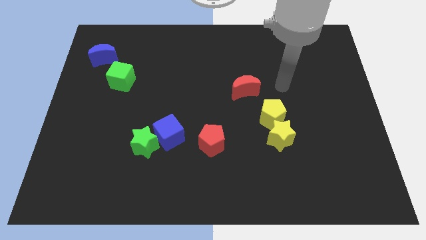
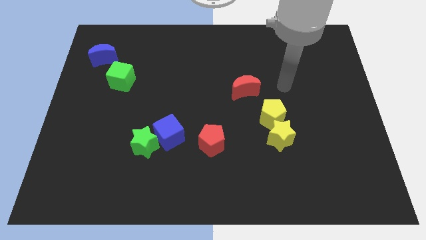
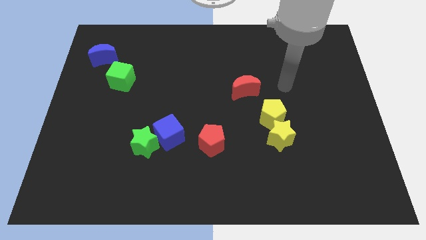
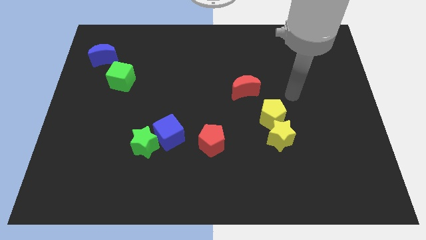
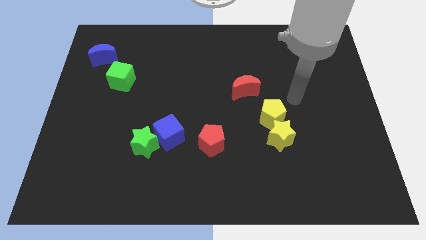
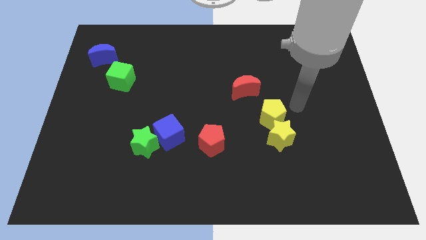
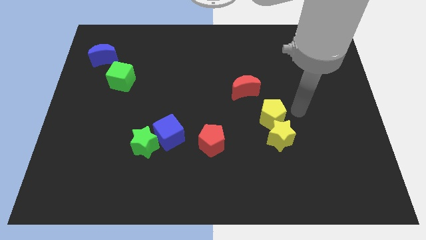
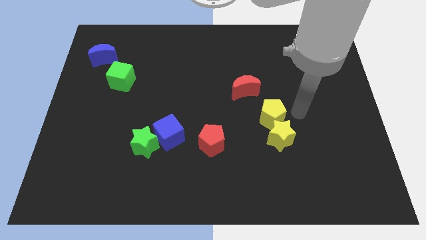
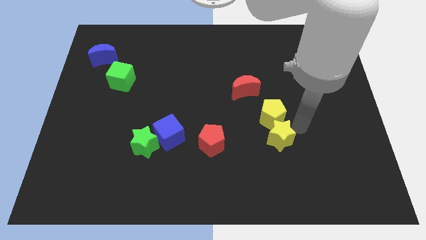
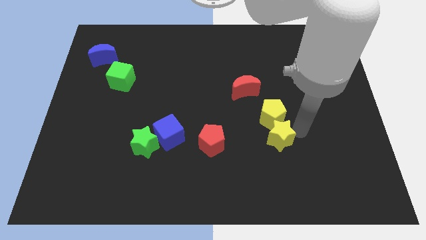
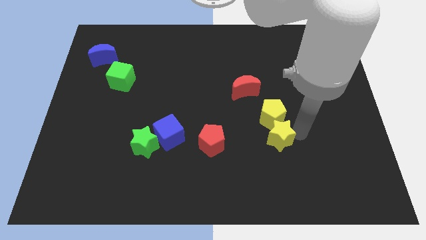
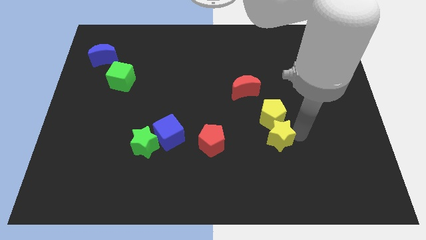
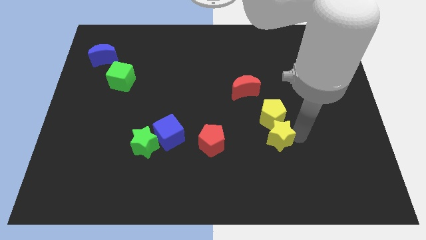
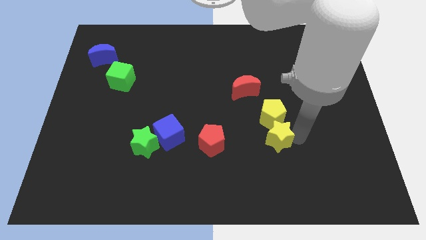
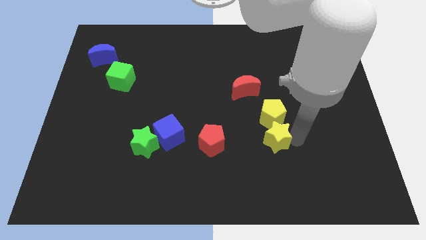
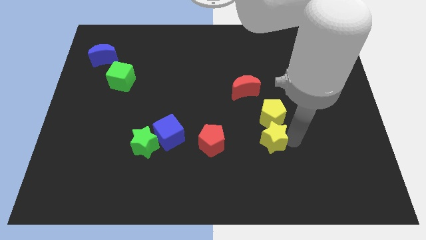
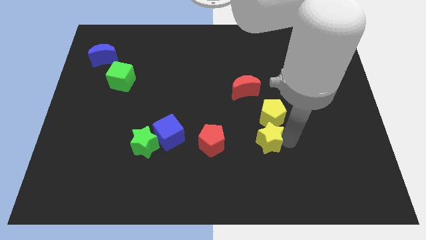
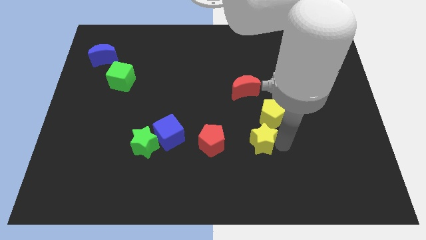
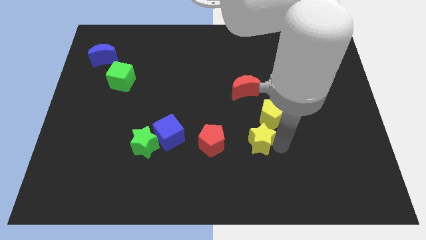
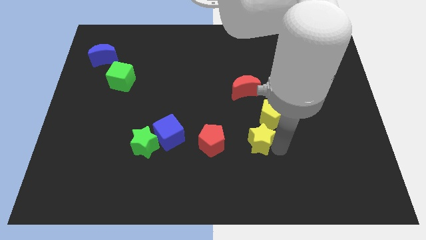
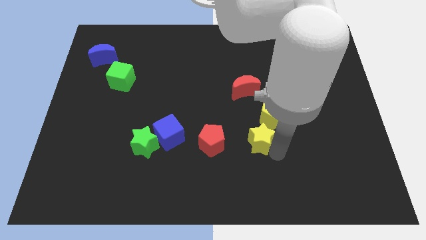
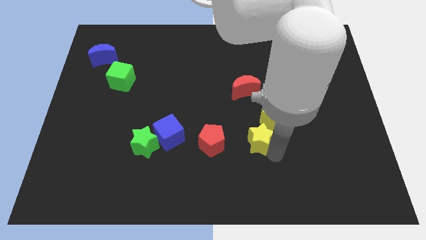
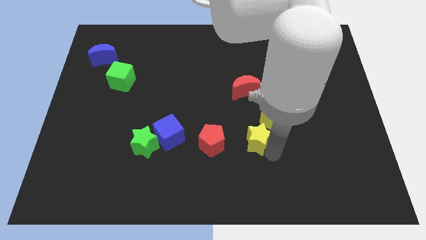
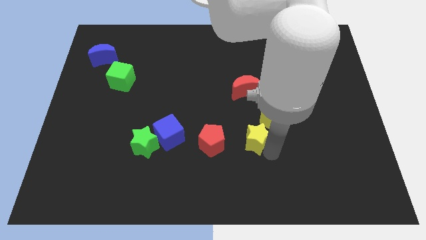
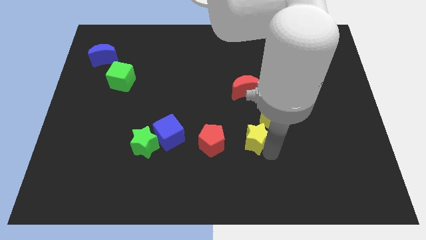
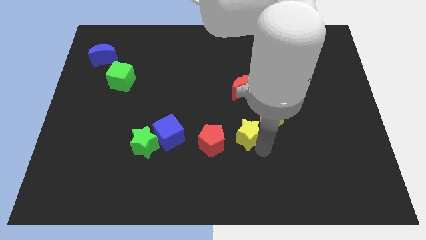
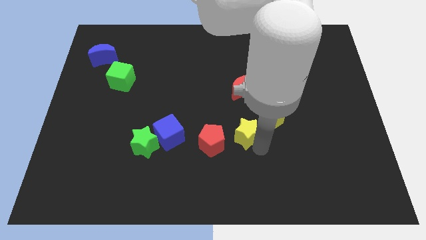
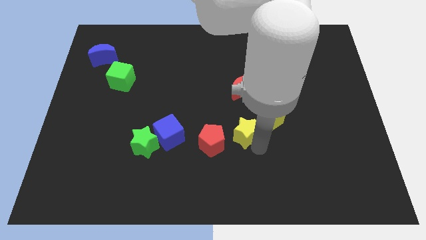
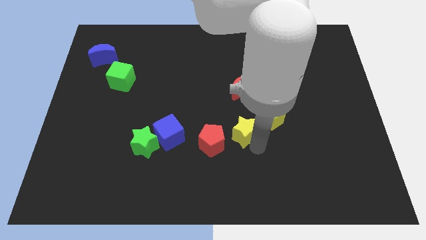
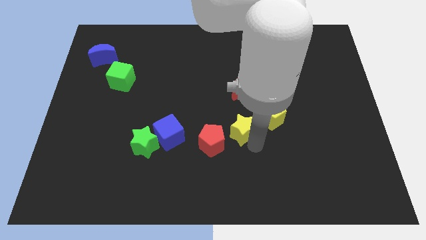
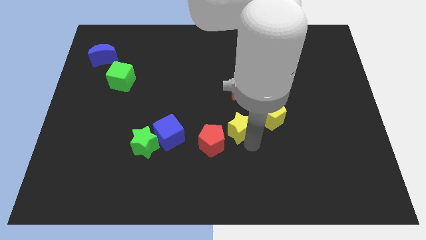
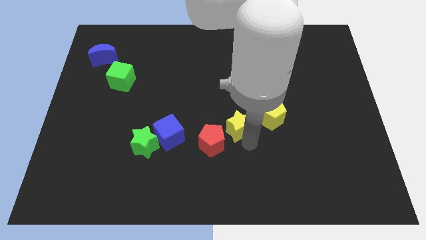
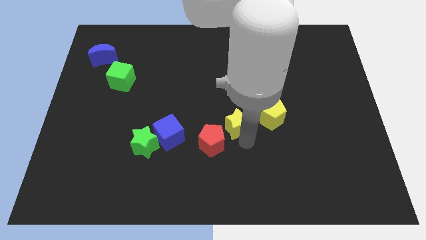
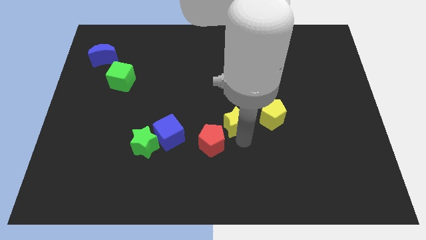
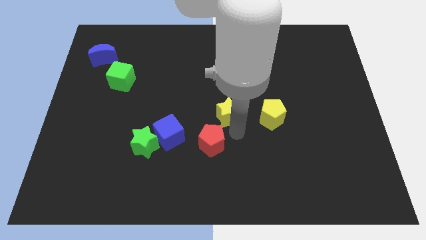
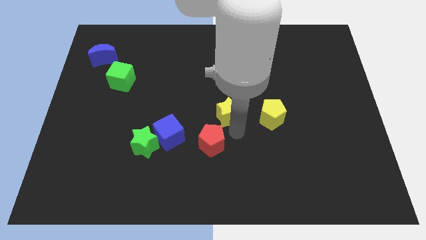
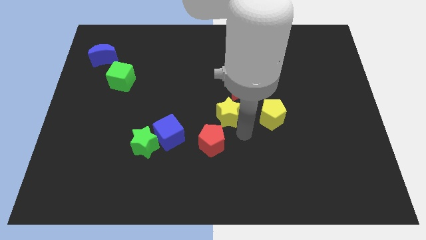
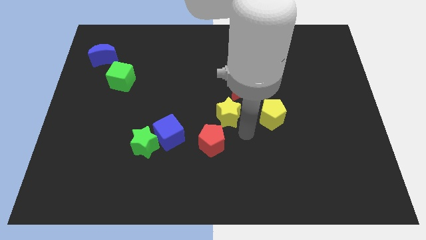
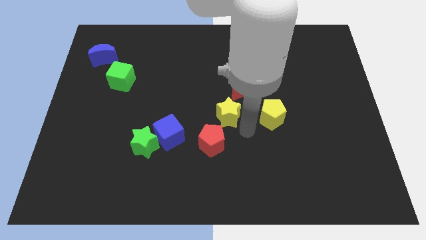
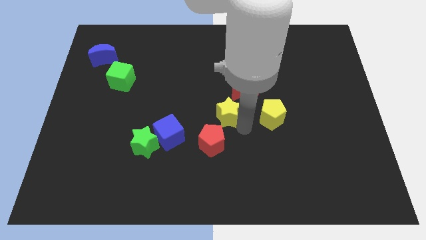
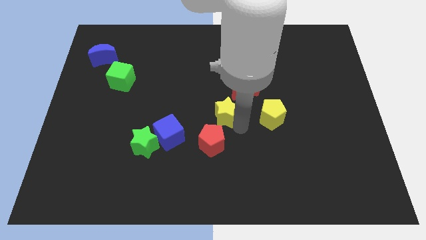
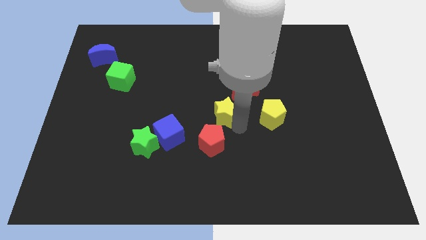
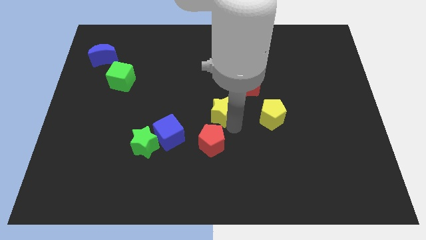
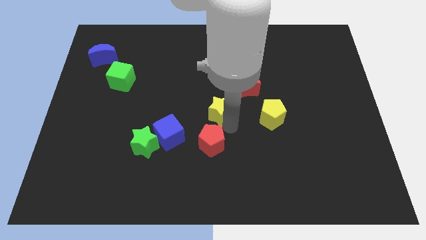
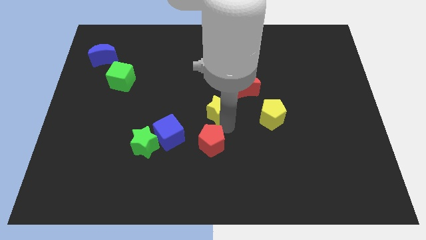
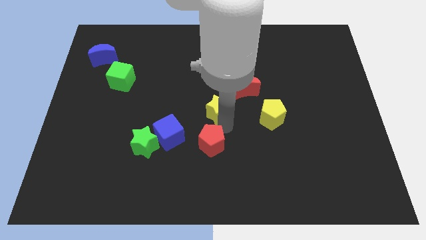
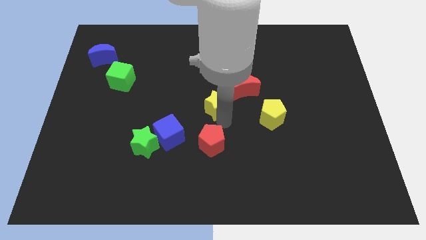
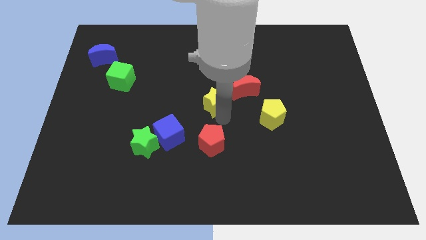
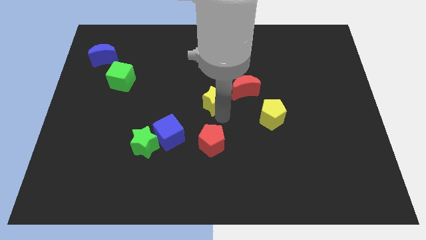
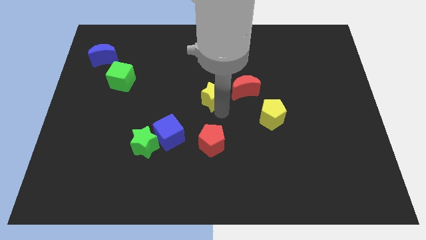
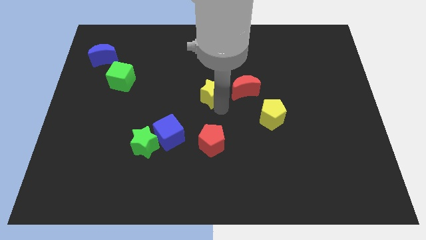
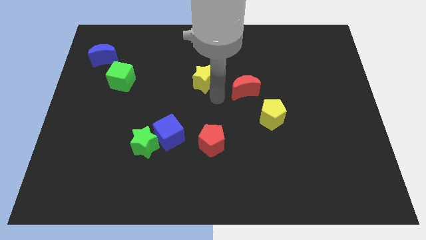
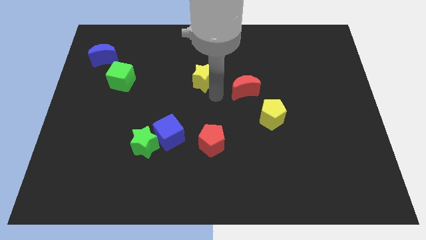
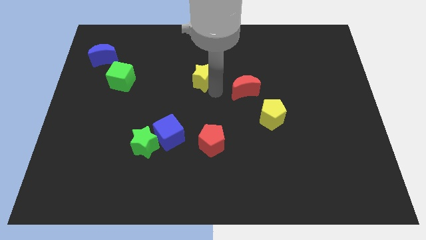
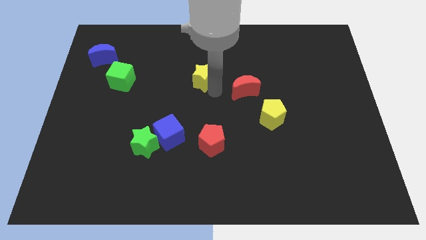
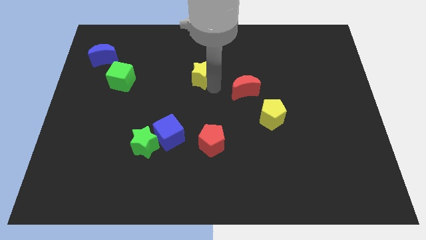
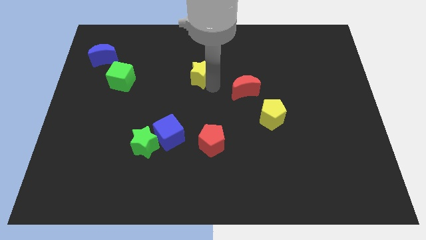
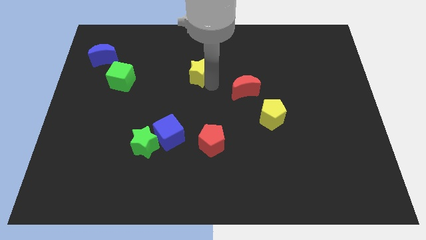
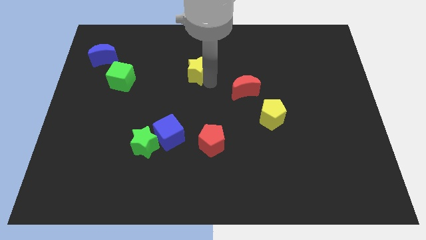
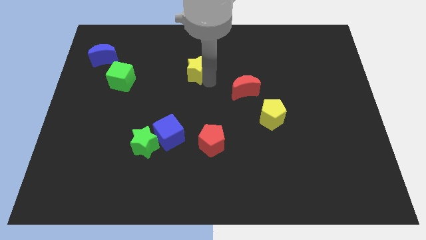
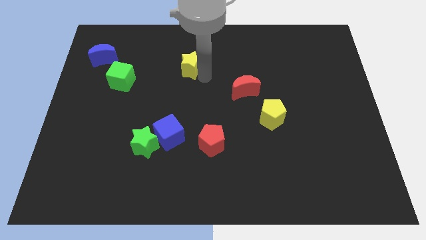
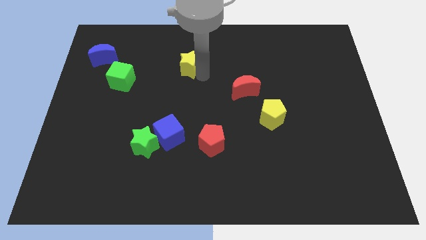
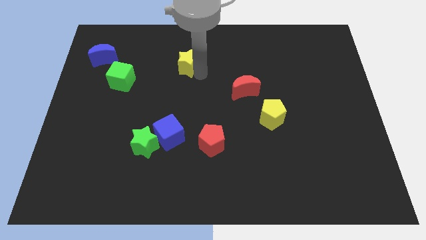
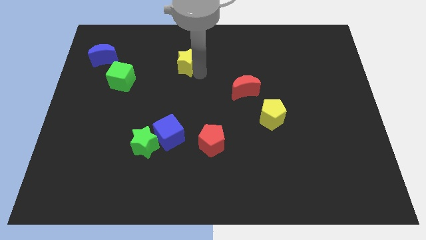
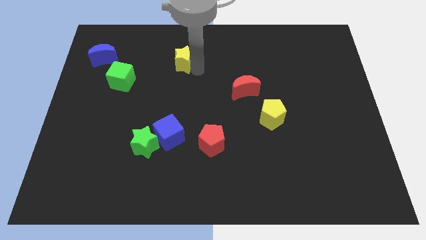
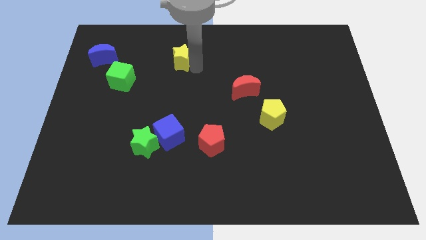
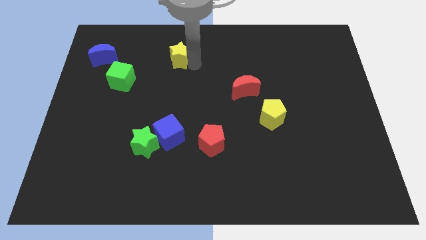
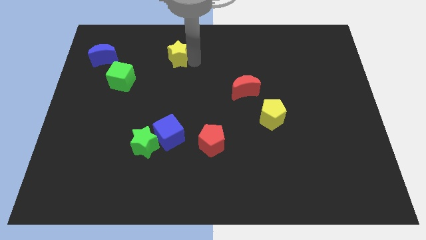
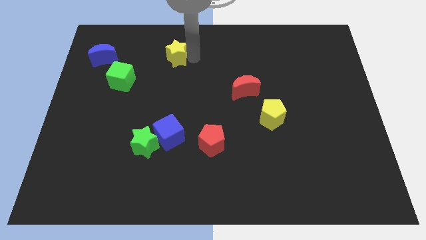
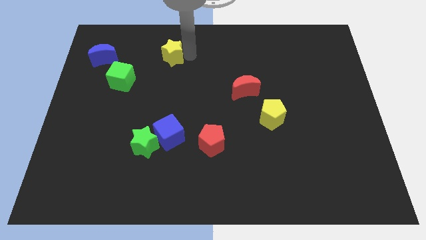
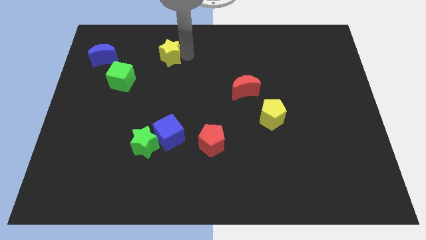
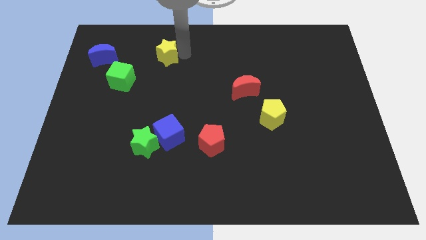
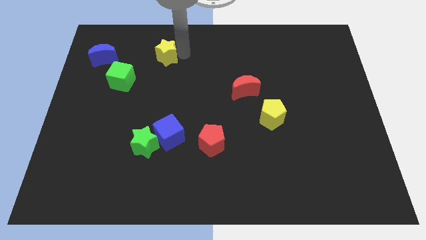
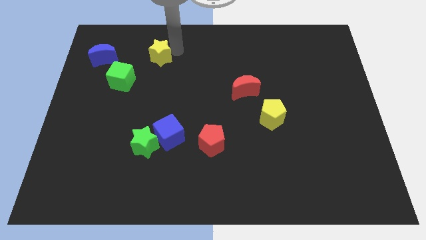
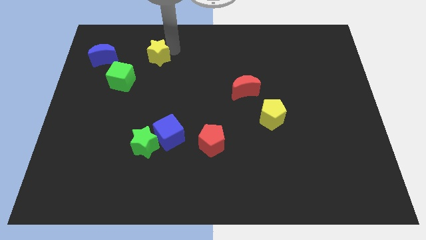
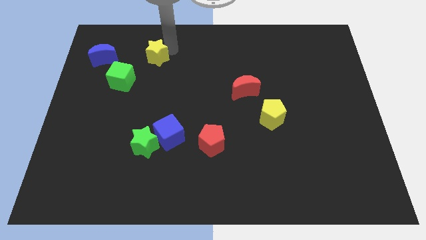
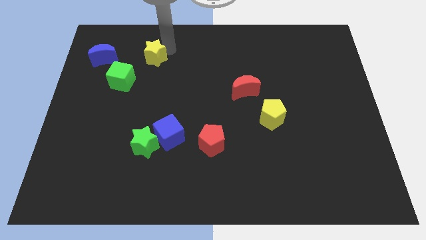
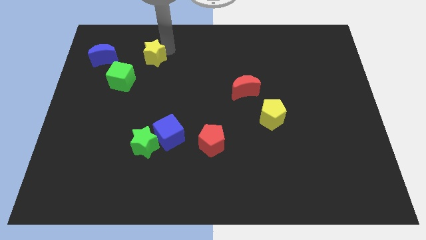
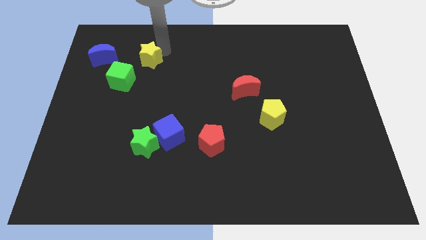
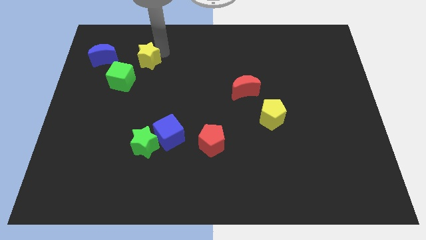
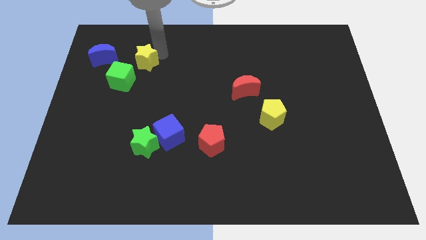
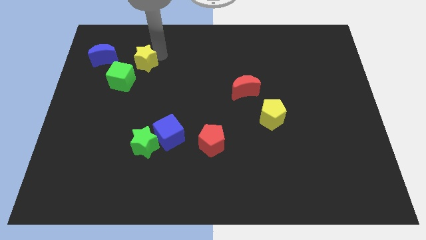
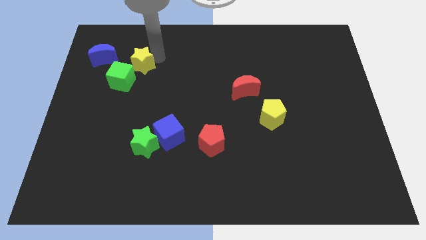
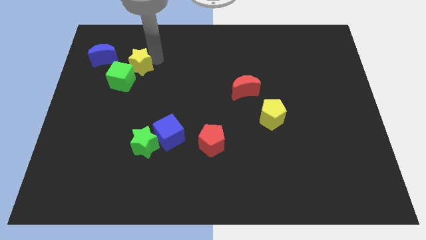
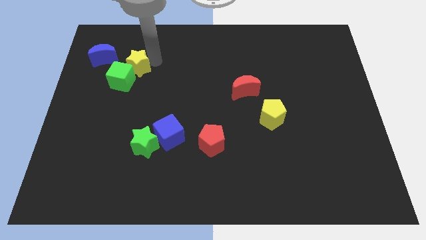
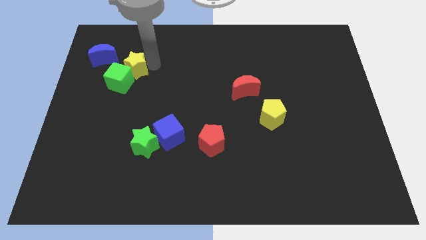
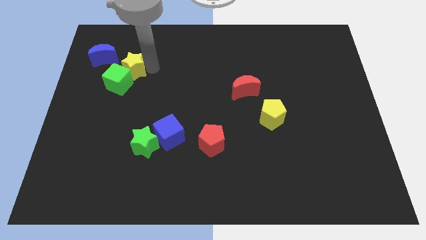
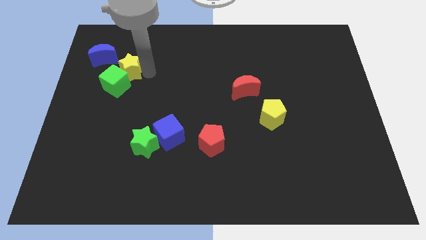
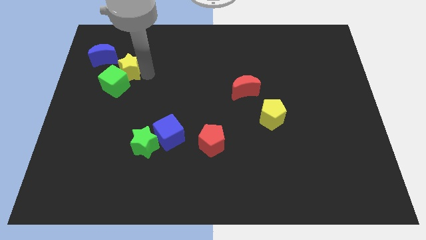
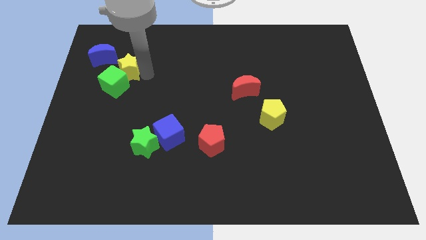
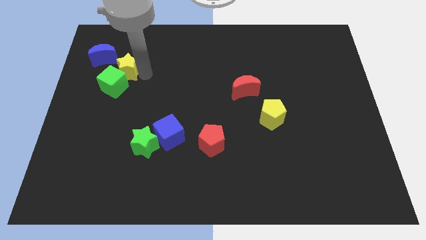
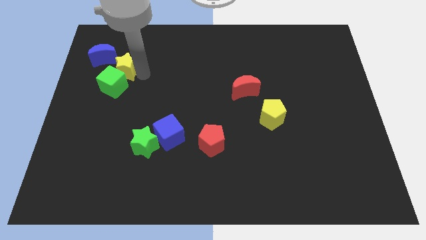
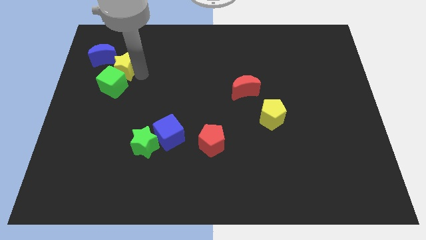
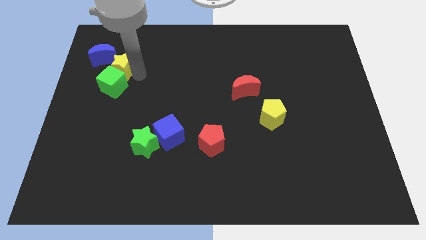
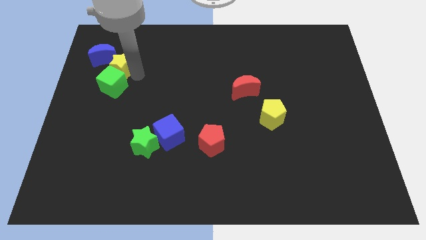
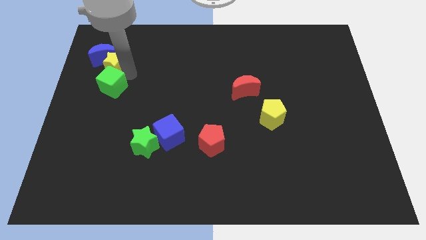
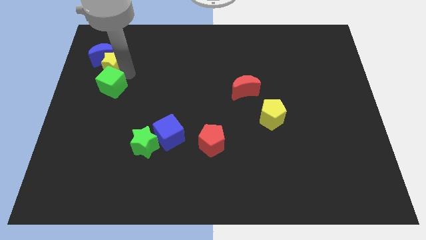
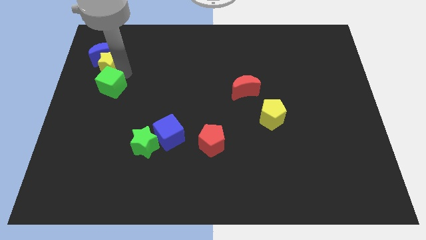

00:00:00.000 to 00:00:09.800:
slide the yellow star close to the blue moon
